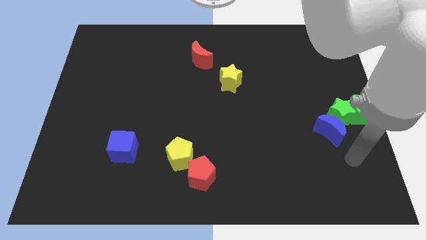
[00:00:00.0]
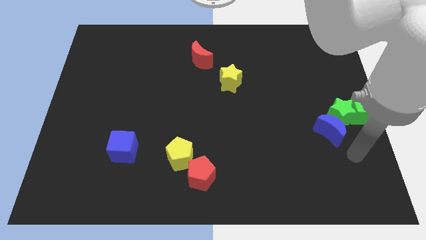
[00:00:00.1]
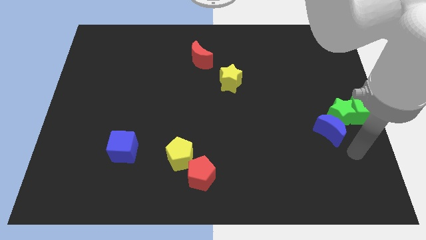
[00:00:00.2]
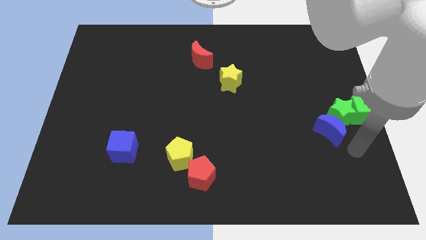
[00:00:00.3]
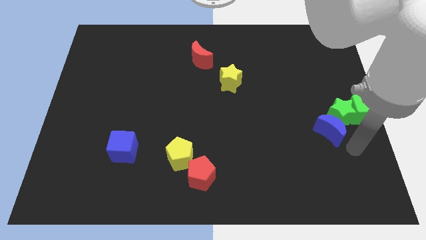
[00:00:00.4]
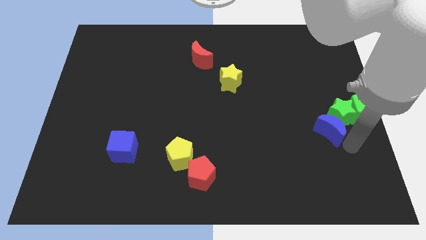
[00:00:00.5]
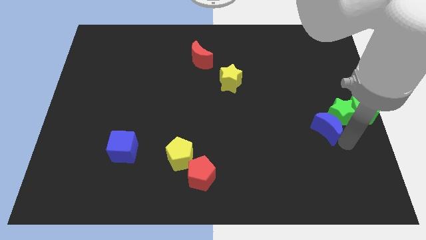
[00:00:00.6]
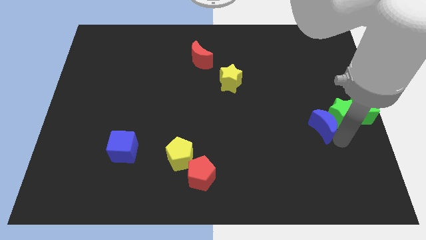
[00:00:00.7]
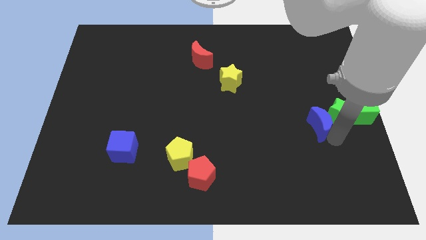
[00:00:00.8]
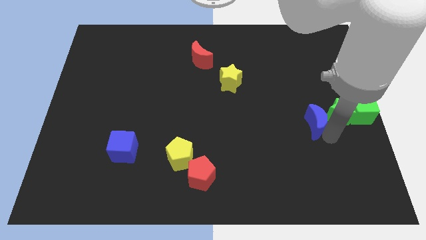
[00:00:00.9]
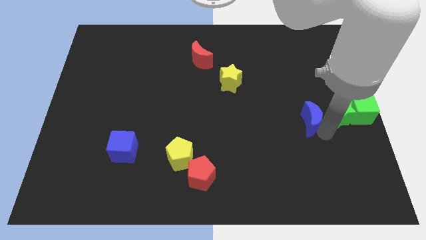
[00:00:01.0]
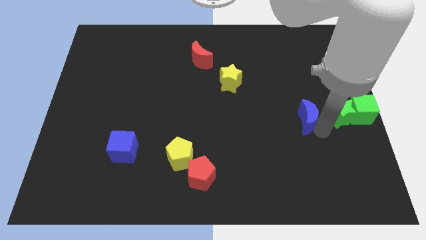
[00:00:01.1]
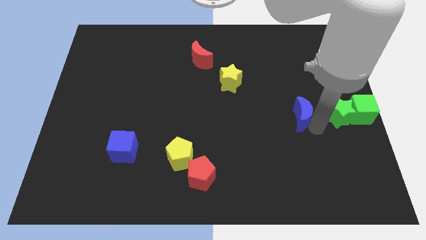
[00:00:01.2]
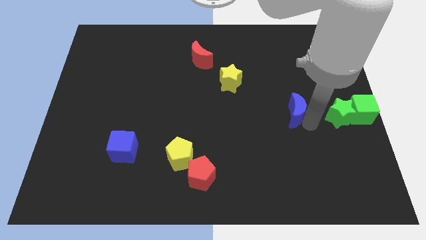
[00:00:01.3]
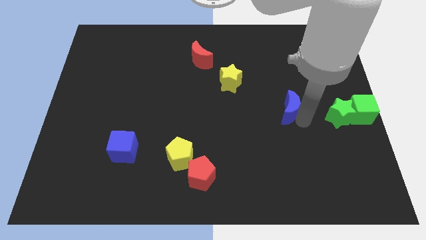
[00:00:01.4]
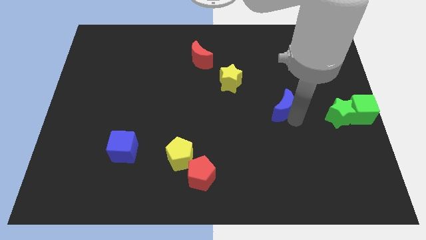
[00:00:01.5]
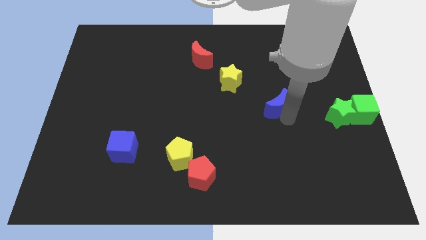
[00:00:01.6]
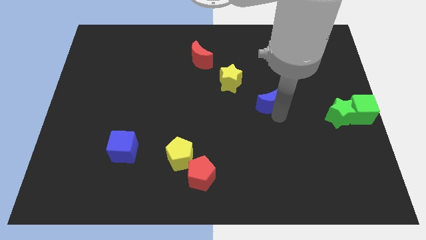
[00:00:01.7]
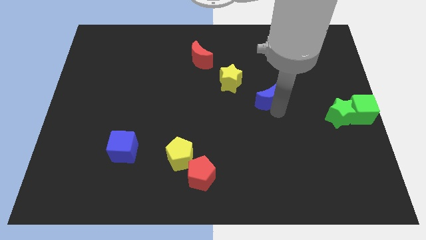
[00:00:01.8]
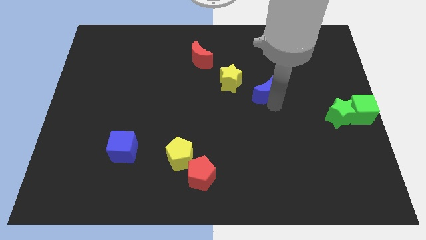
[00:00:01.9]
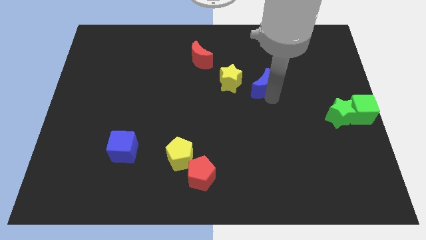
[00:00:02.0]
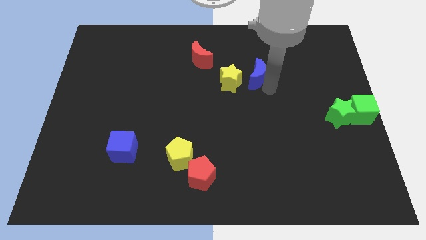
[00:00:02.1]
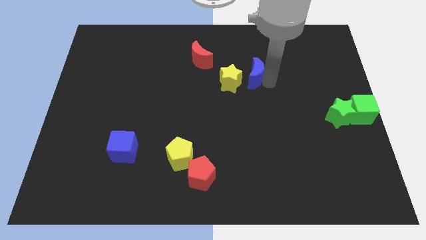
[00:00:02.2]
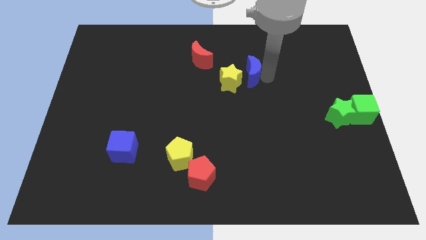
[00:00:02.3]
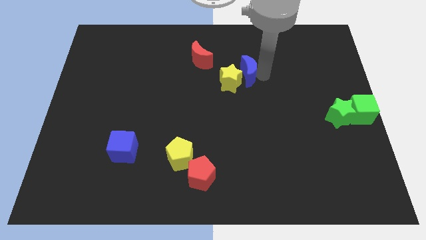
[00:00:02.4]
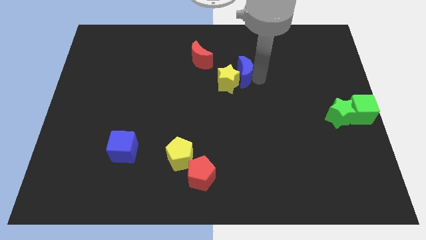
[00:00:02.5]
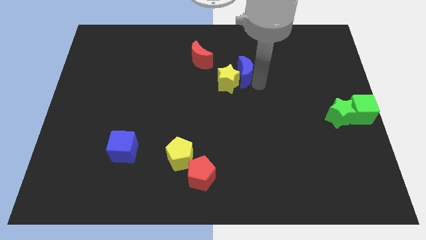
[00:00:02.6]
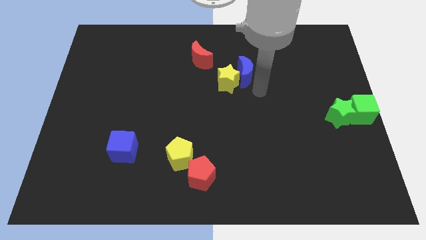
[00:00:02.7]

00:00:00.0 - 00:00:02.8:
push the blue crescent into yellow star

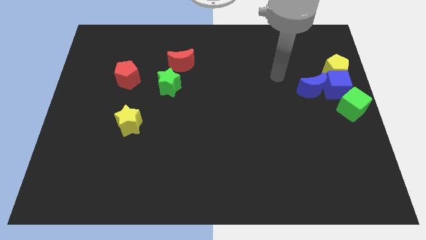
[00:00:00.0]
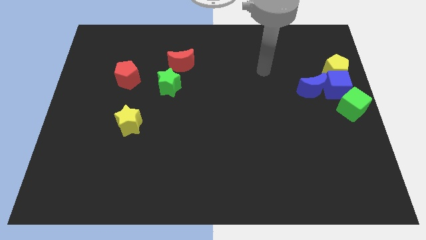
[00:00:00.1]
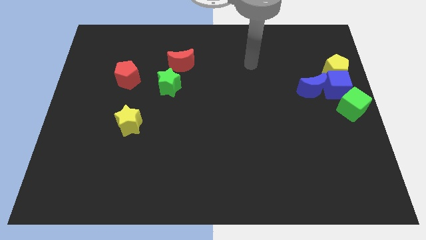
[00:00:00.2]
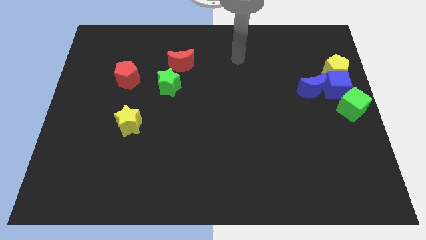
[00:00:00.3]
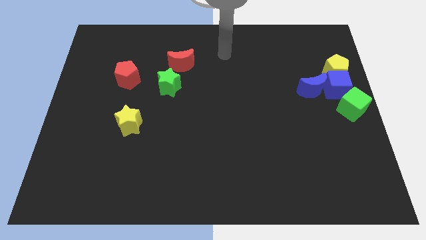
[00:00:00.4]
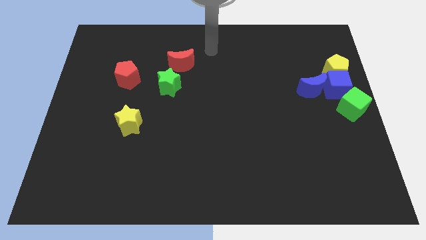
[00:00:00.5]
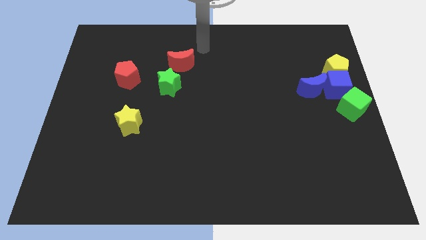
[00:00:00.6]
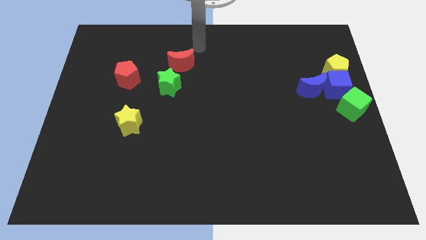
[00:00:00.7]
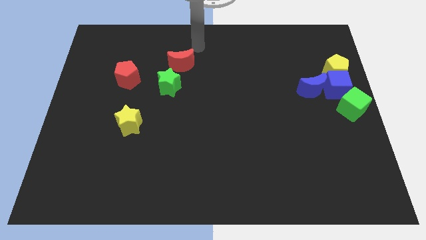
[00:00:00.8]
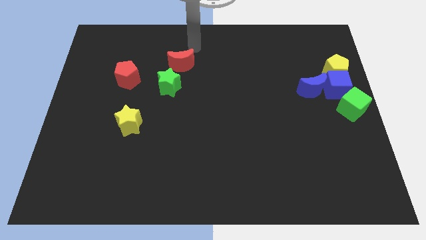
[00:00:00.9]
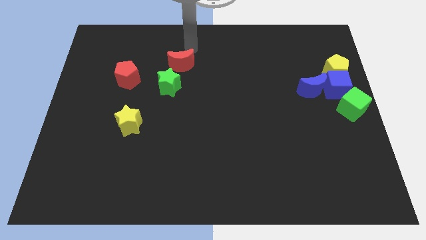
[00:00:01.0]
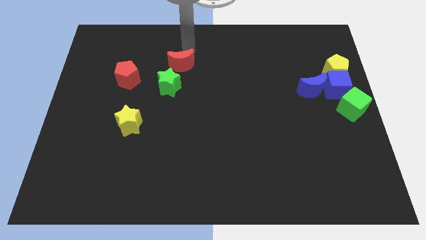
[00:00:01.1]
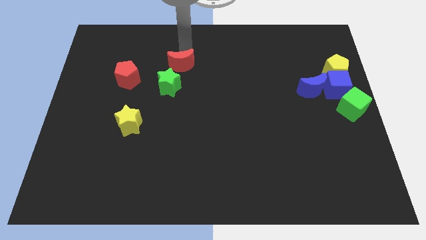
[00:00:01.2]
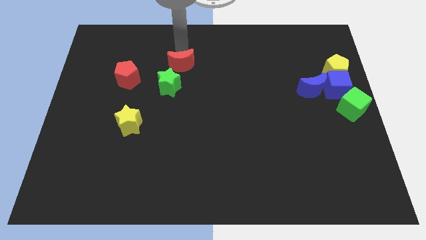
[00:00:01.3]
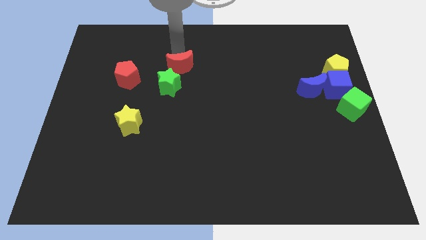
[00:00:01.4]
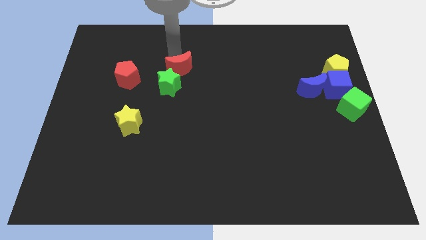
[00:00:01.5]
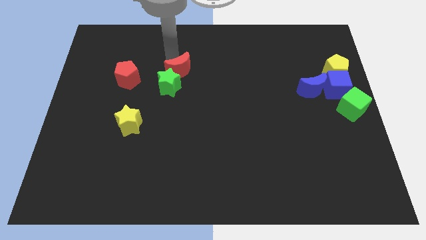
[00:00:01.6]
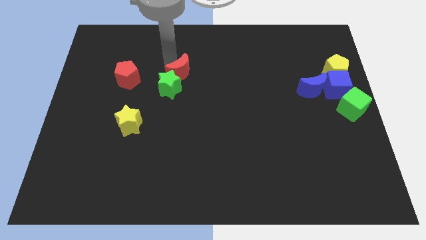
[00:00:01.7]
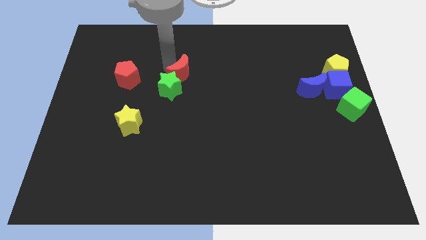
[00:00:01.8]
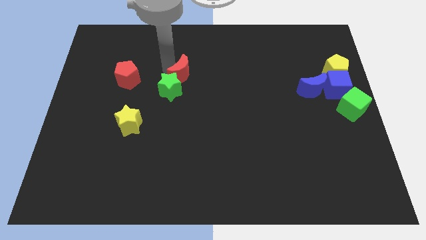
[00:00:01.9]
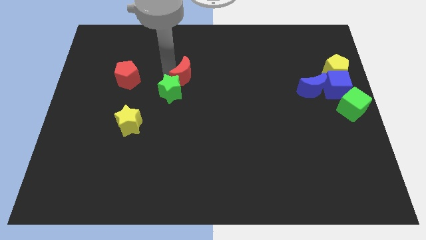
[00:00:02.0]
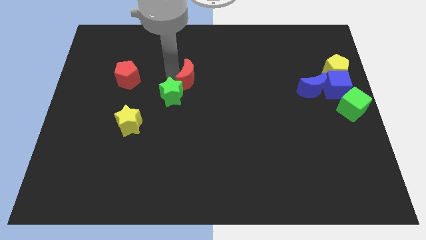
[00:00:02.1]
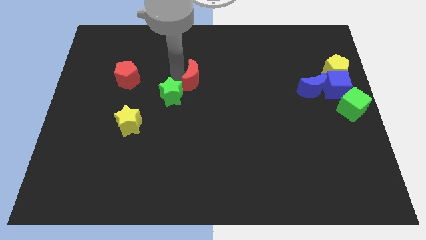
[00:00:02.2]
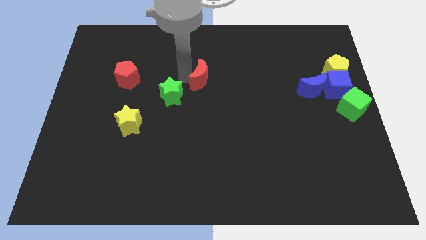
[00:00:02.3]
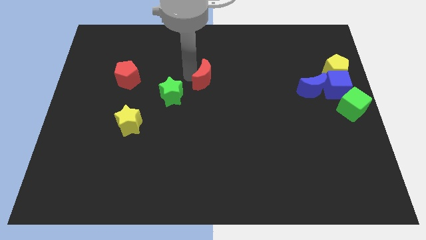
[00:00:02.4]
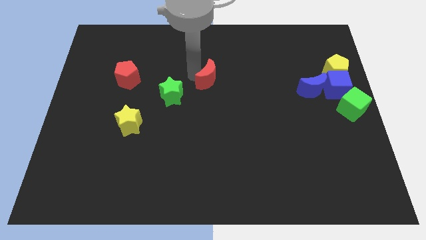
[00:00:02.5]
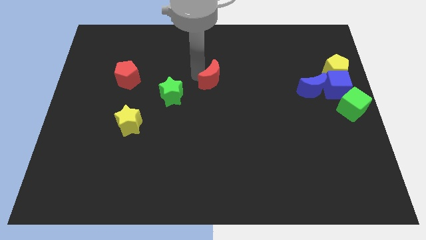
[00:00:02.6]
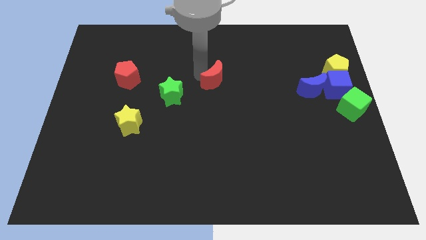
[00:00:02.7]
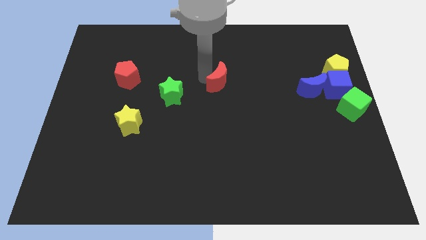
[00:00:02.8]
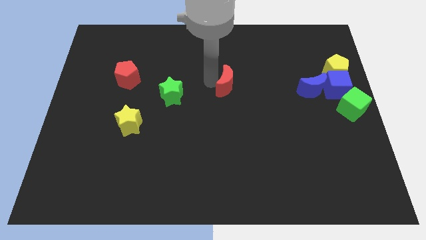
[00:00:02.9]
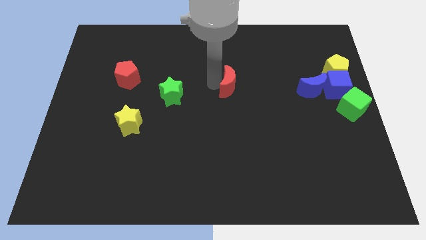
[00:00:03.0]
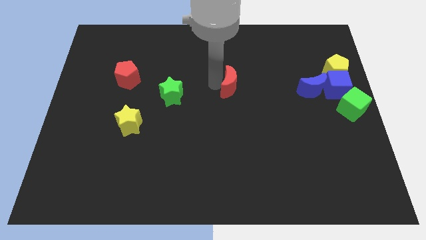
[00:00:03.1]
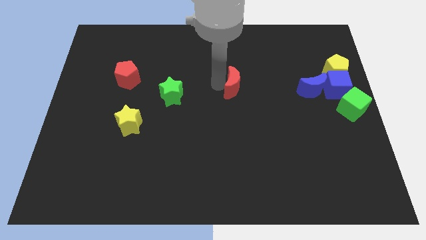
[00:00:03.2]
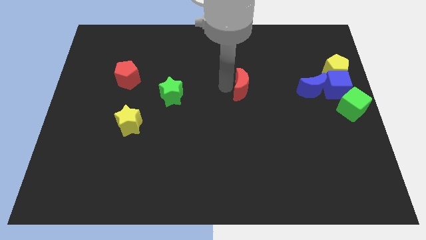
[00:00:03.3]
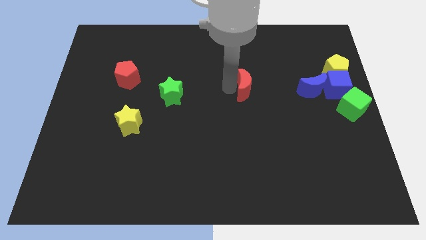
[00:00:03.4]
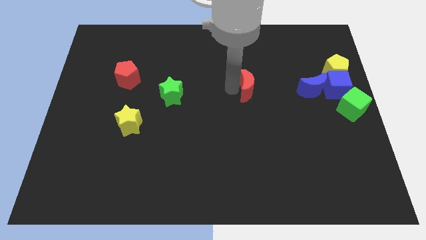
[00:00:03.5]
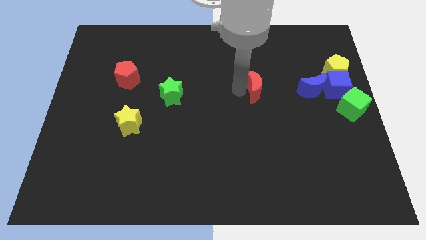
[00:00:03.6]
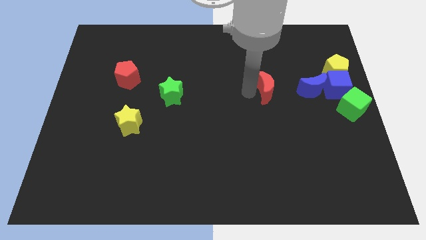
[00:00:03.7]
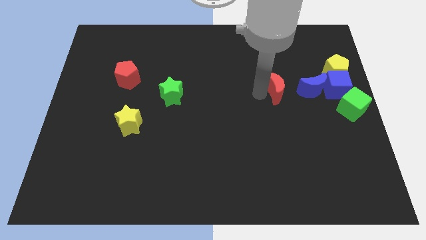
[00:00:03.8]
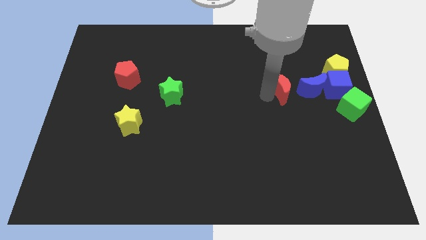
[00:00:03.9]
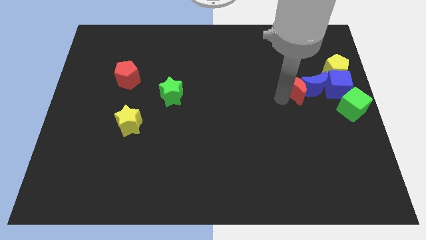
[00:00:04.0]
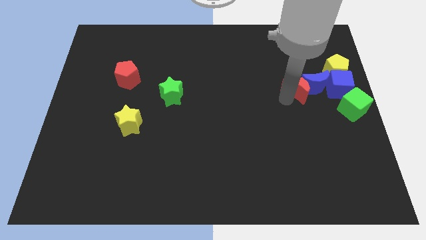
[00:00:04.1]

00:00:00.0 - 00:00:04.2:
move red crescent to the left of blue crescent

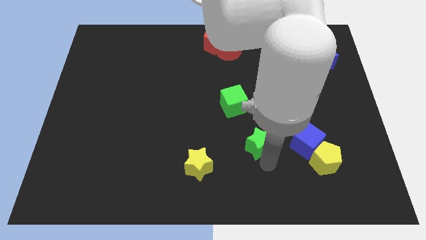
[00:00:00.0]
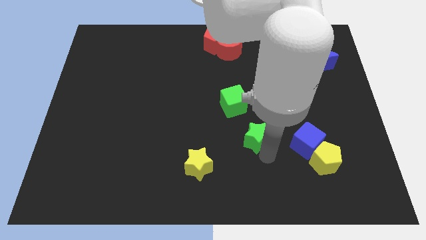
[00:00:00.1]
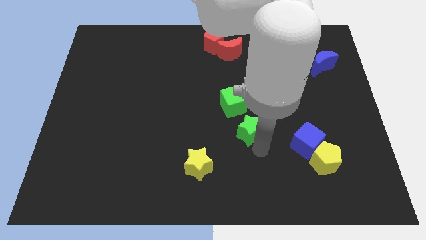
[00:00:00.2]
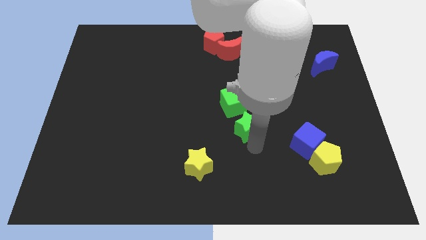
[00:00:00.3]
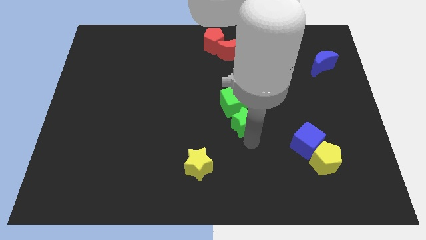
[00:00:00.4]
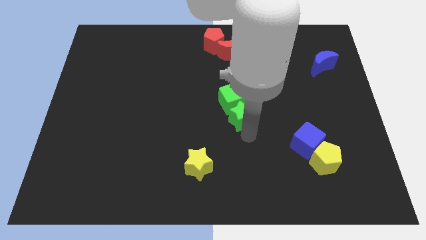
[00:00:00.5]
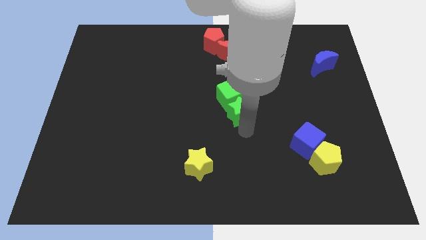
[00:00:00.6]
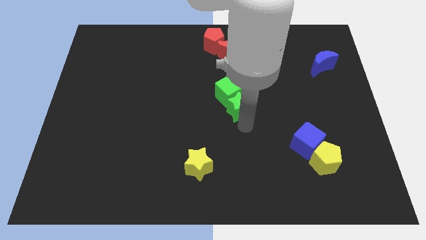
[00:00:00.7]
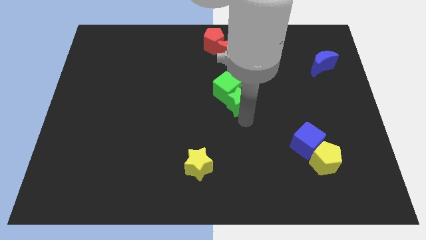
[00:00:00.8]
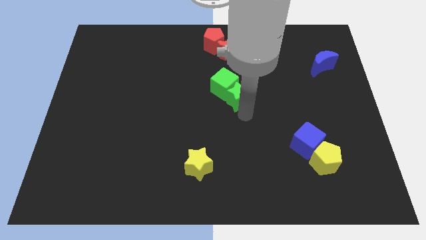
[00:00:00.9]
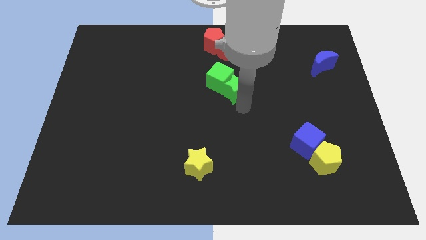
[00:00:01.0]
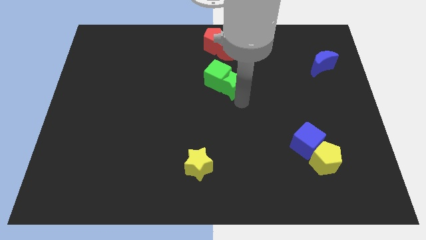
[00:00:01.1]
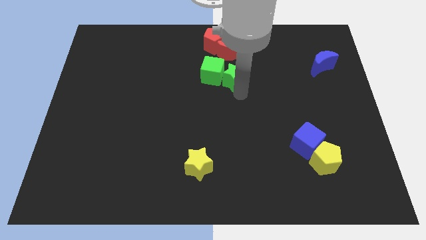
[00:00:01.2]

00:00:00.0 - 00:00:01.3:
push the green star into the green cube

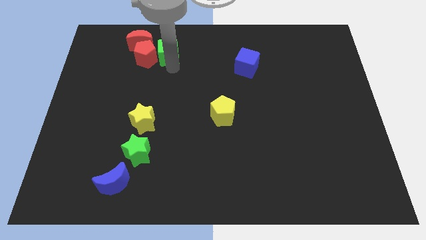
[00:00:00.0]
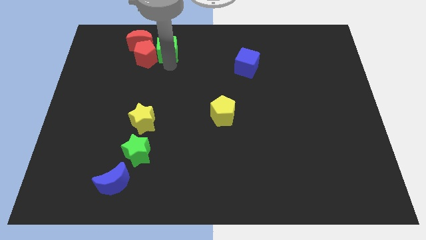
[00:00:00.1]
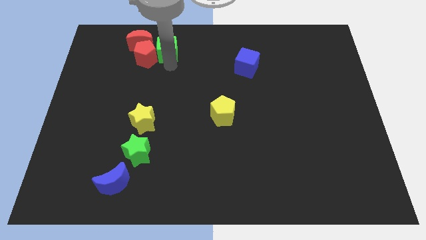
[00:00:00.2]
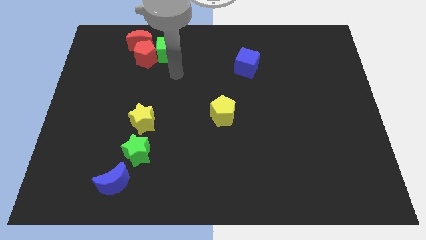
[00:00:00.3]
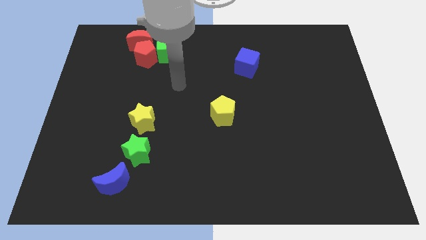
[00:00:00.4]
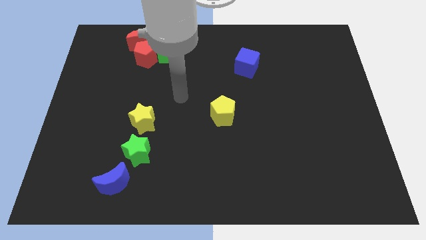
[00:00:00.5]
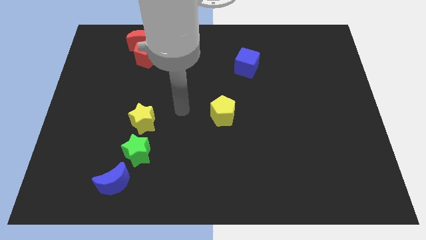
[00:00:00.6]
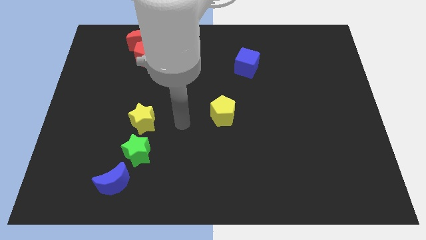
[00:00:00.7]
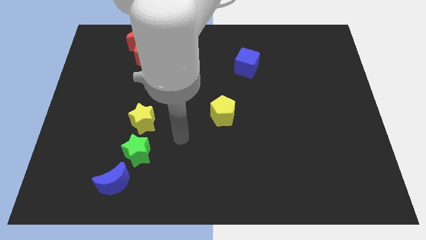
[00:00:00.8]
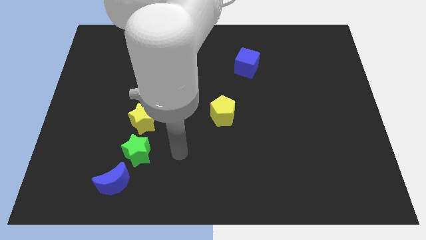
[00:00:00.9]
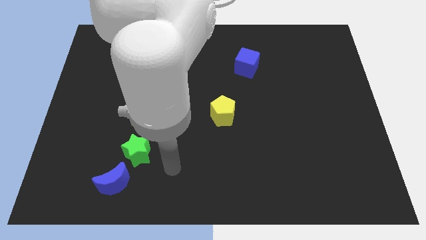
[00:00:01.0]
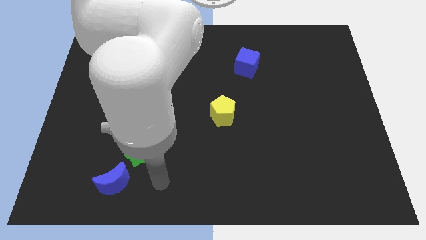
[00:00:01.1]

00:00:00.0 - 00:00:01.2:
move the arm away from the green cube
